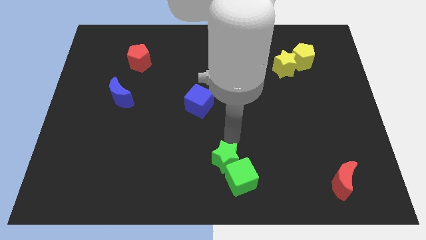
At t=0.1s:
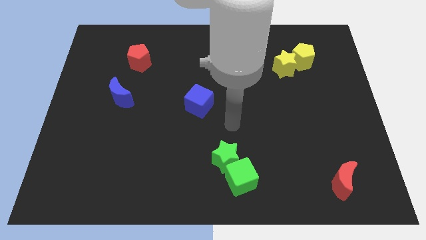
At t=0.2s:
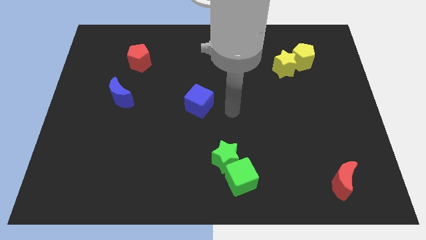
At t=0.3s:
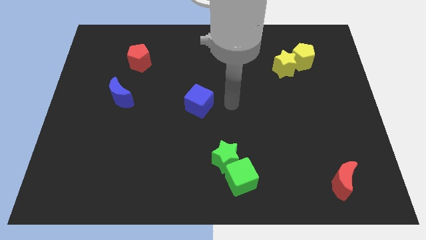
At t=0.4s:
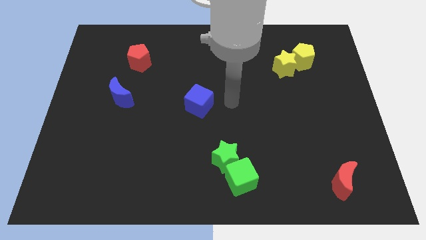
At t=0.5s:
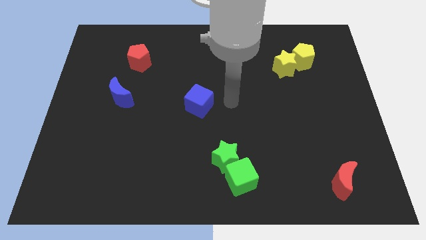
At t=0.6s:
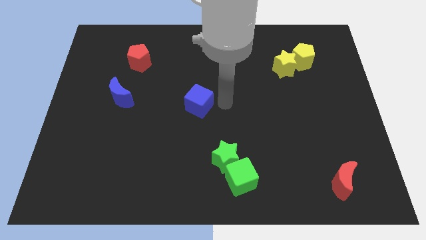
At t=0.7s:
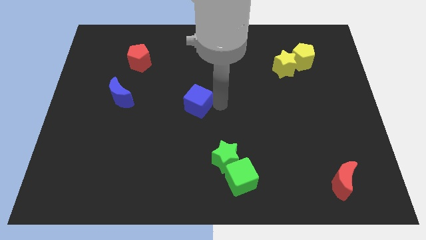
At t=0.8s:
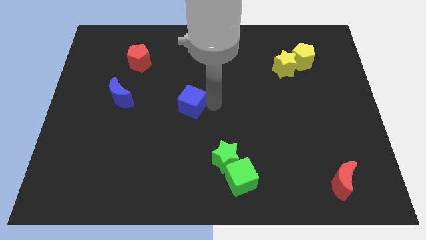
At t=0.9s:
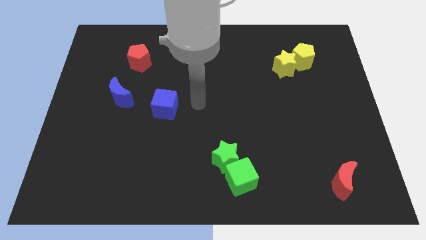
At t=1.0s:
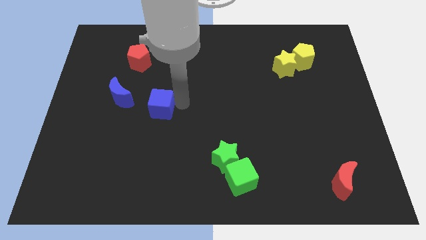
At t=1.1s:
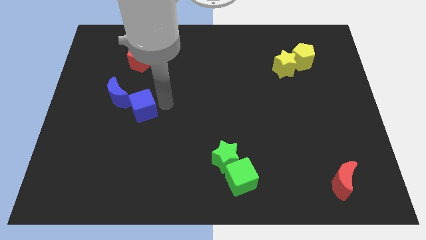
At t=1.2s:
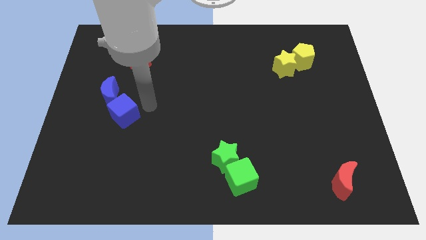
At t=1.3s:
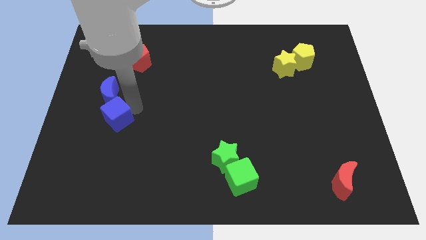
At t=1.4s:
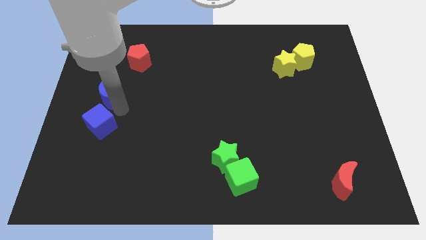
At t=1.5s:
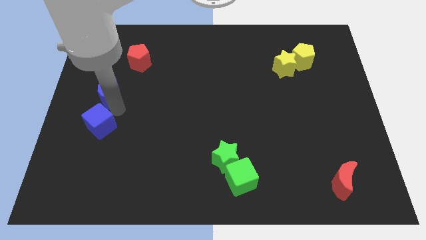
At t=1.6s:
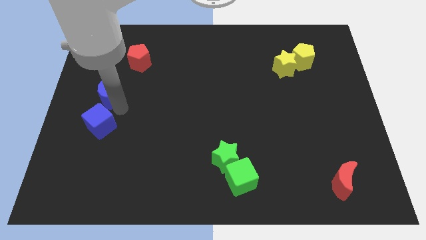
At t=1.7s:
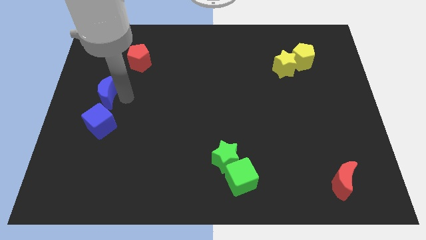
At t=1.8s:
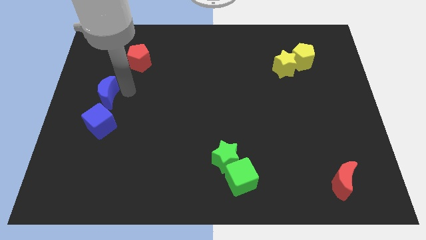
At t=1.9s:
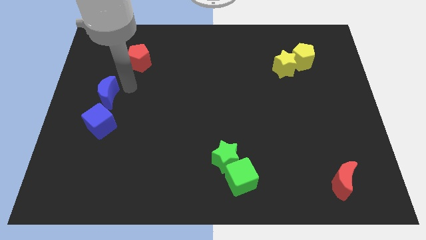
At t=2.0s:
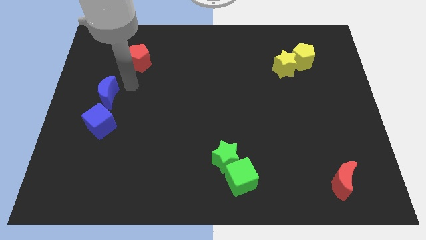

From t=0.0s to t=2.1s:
push blue cube below the blue moon

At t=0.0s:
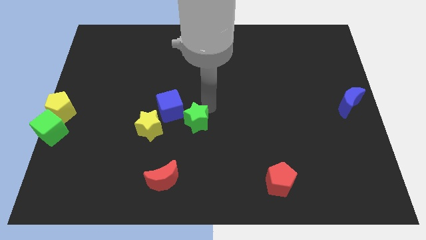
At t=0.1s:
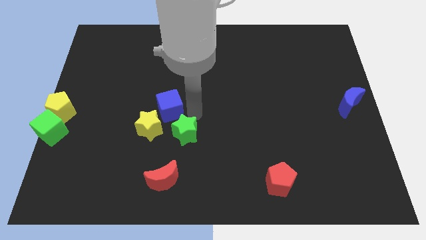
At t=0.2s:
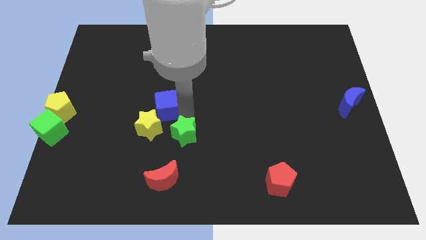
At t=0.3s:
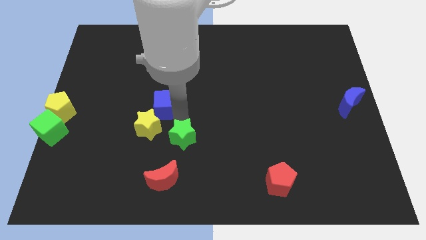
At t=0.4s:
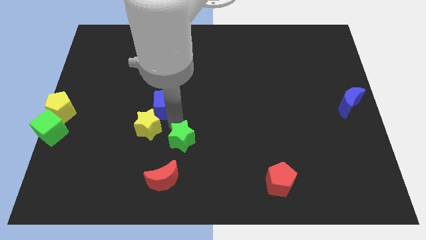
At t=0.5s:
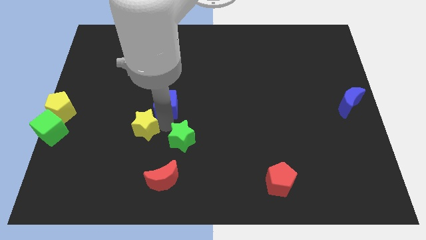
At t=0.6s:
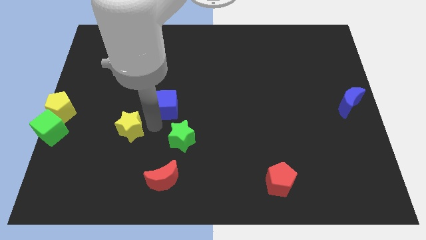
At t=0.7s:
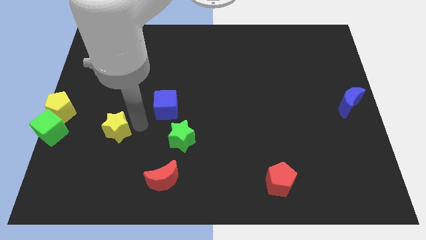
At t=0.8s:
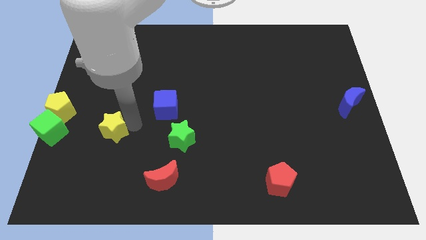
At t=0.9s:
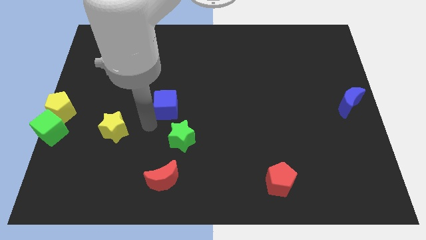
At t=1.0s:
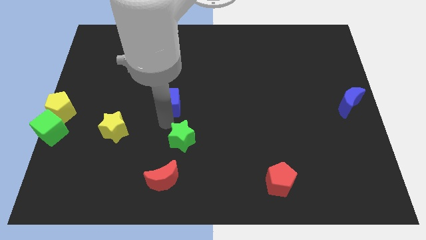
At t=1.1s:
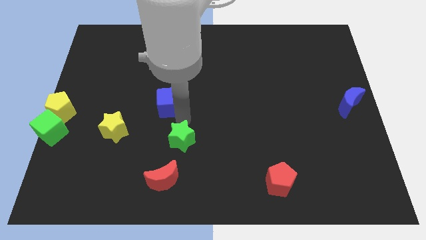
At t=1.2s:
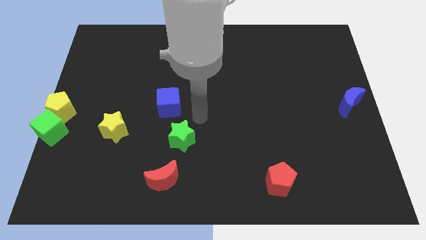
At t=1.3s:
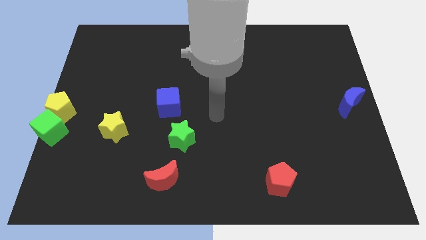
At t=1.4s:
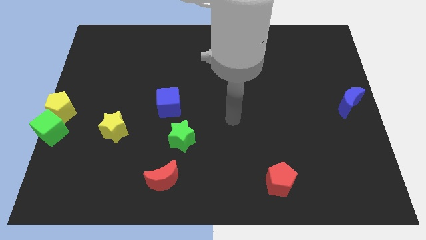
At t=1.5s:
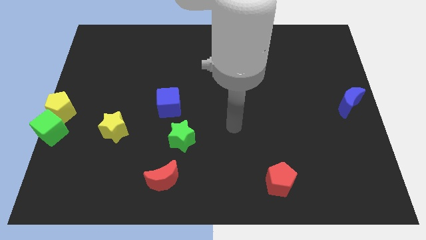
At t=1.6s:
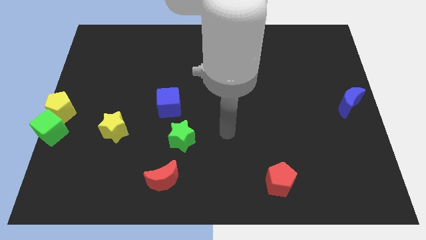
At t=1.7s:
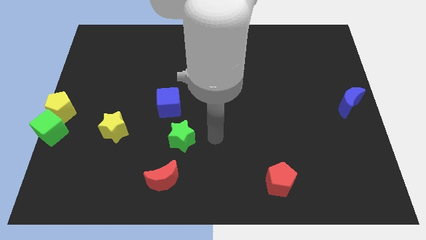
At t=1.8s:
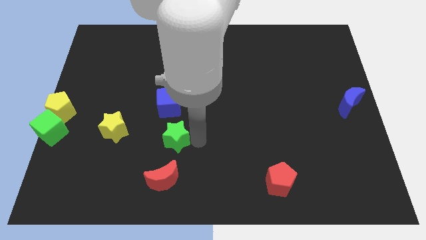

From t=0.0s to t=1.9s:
separate the yellow star from the blue cube

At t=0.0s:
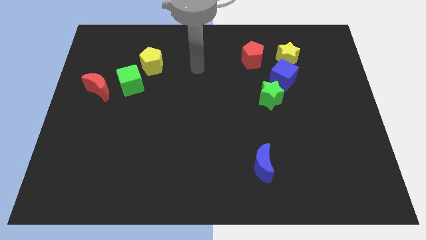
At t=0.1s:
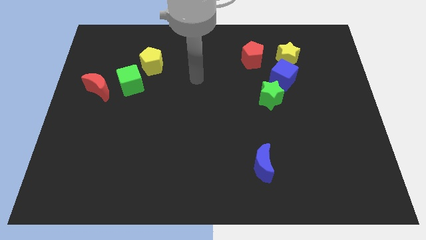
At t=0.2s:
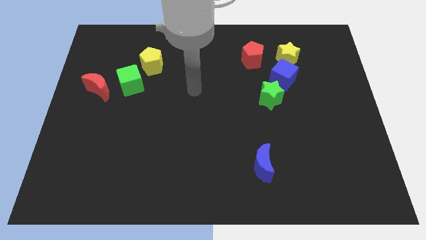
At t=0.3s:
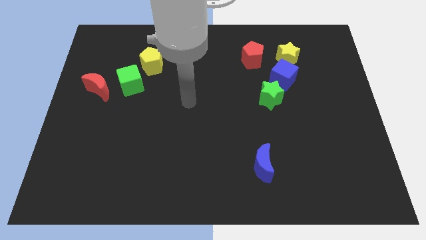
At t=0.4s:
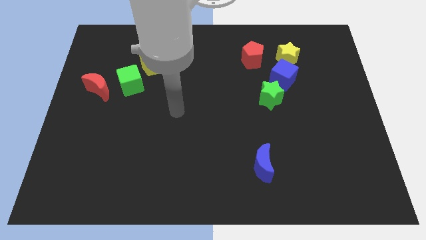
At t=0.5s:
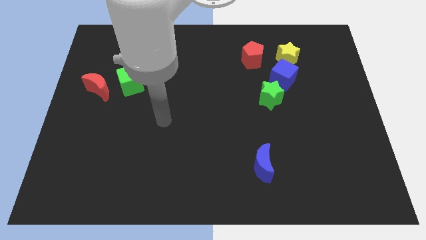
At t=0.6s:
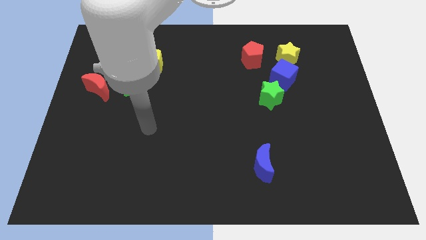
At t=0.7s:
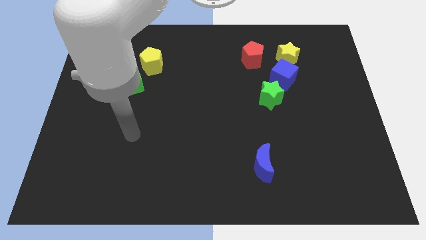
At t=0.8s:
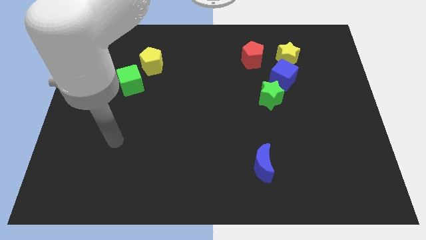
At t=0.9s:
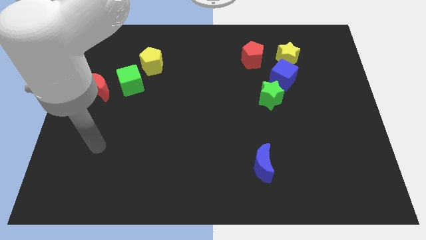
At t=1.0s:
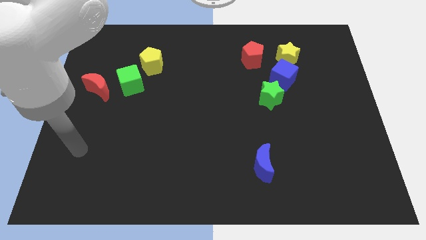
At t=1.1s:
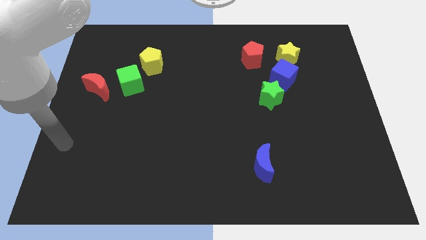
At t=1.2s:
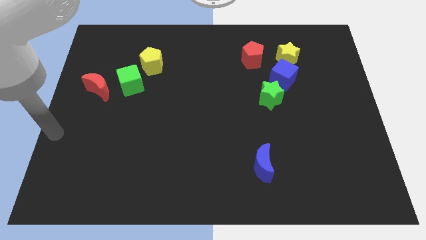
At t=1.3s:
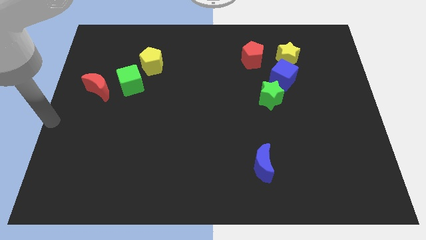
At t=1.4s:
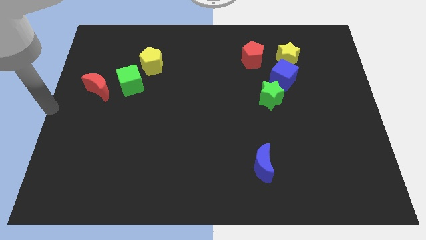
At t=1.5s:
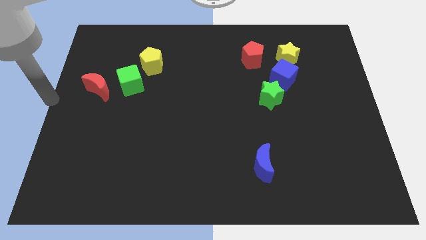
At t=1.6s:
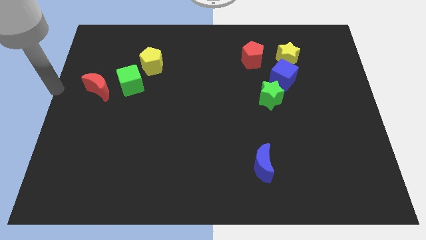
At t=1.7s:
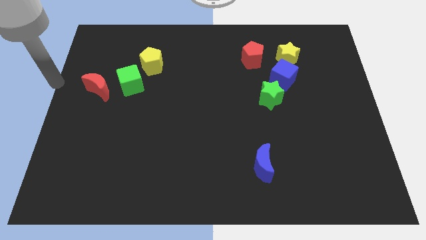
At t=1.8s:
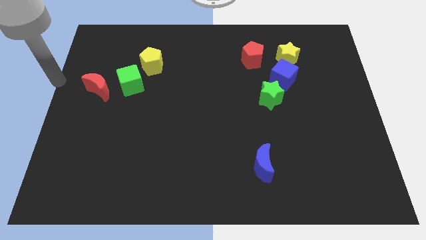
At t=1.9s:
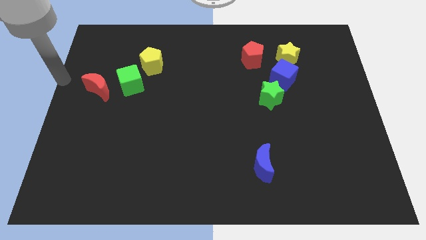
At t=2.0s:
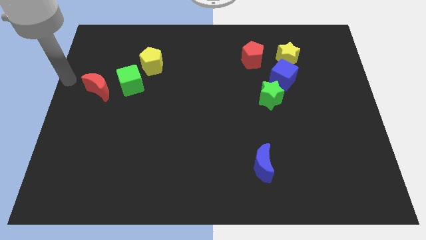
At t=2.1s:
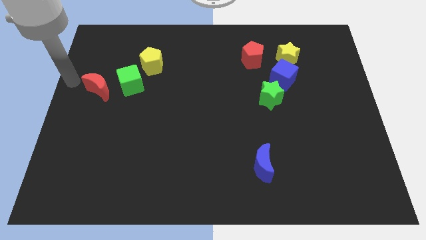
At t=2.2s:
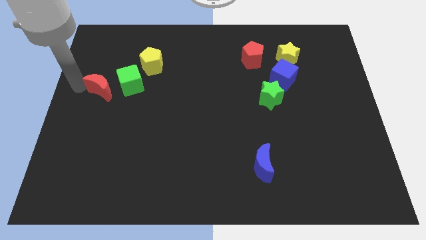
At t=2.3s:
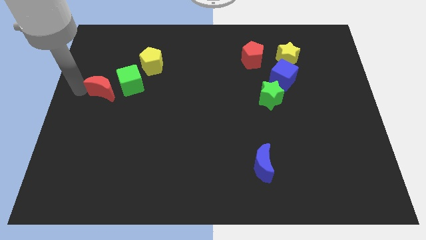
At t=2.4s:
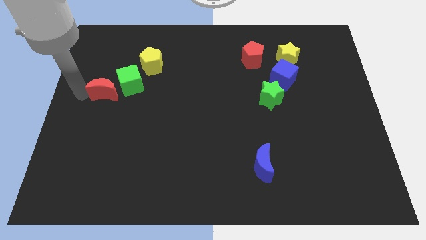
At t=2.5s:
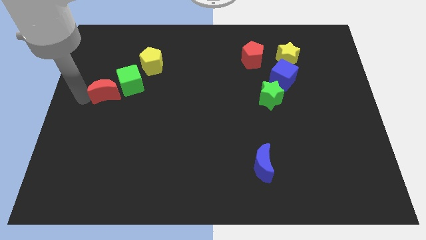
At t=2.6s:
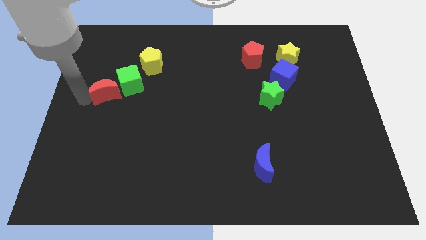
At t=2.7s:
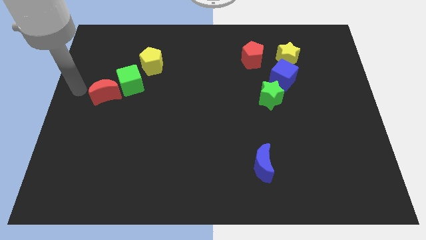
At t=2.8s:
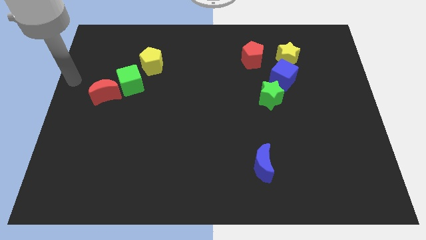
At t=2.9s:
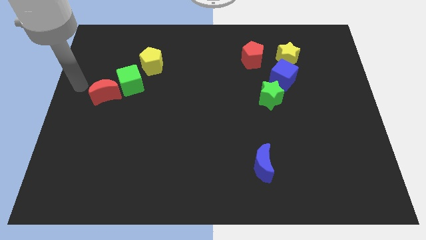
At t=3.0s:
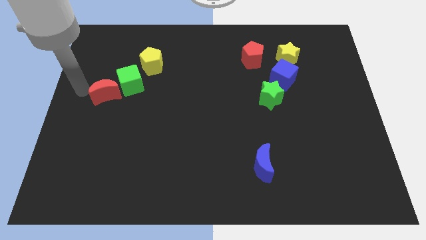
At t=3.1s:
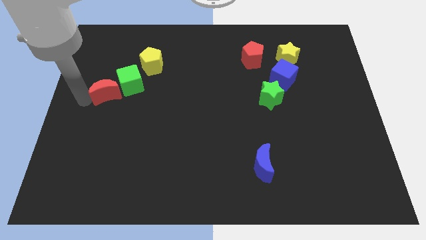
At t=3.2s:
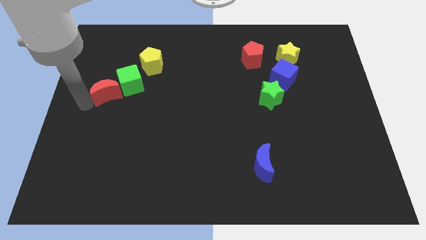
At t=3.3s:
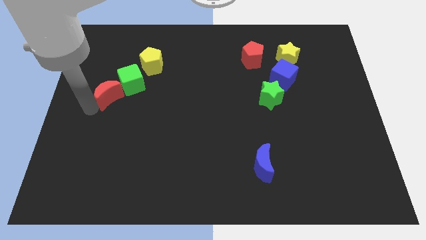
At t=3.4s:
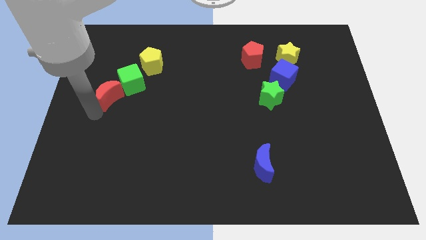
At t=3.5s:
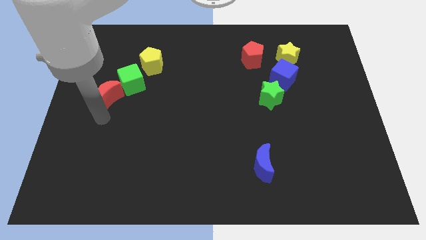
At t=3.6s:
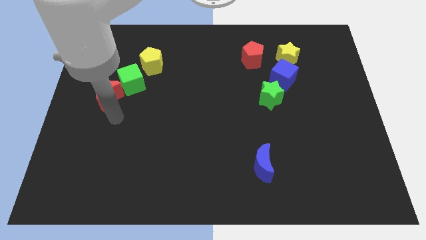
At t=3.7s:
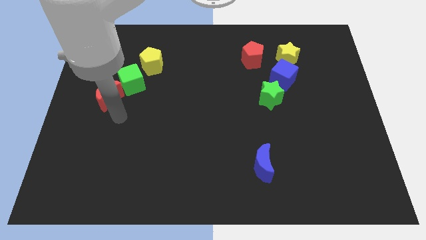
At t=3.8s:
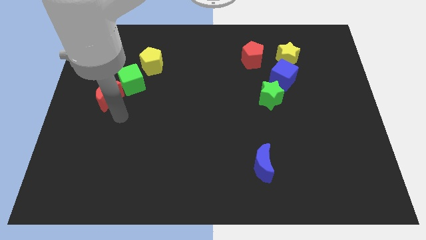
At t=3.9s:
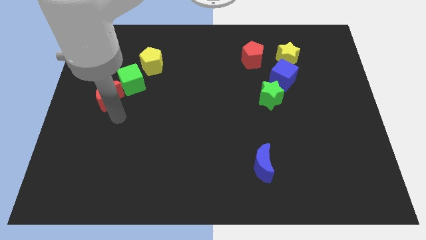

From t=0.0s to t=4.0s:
slightly touch the red crescent

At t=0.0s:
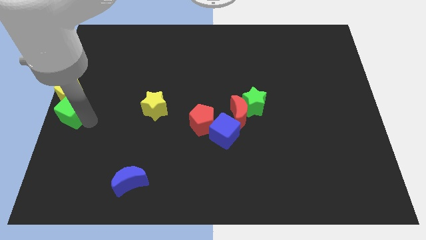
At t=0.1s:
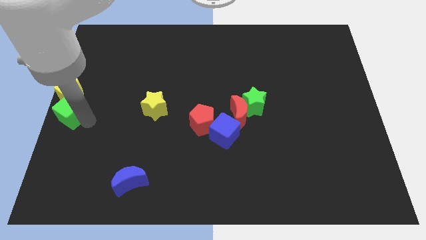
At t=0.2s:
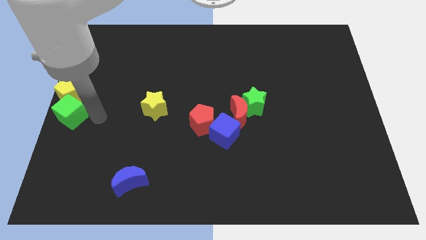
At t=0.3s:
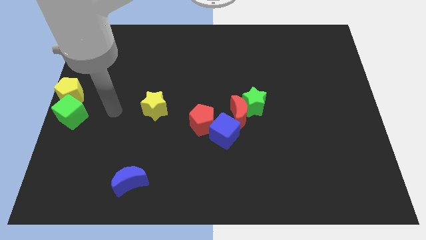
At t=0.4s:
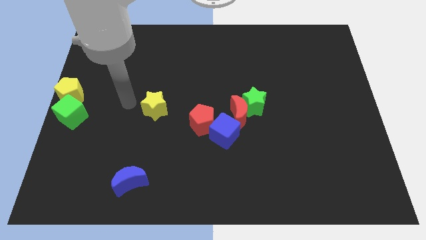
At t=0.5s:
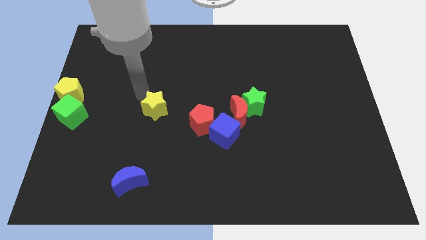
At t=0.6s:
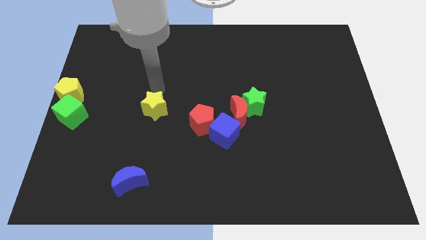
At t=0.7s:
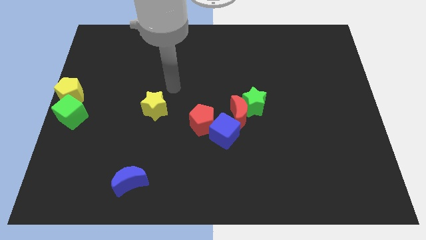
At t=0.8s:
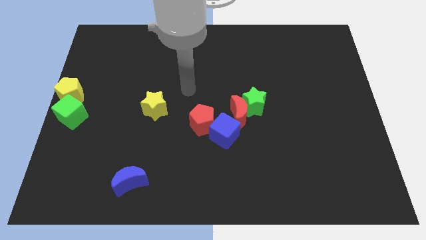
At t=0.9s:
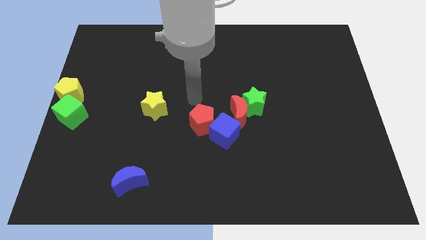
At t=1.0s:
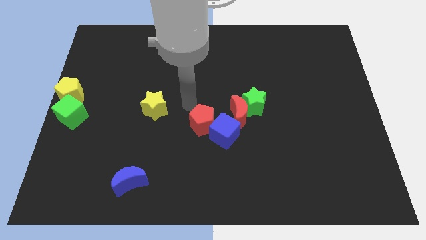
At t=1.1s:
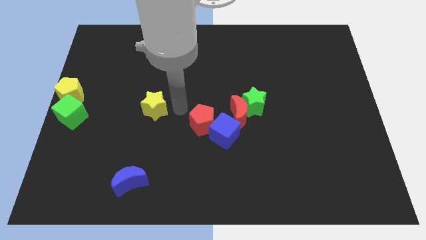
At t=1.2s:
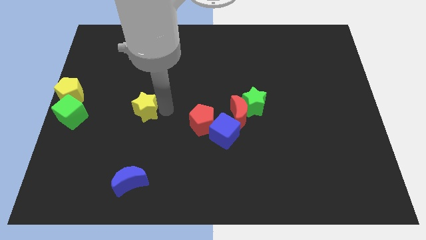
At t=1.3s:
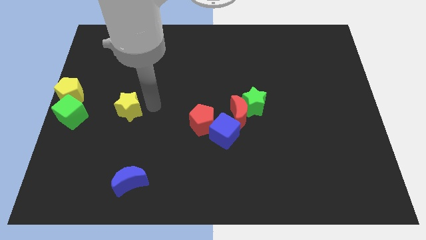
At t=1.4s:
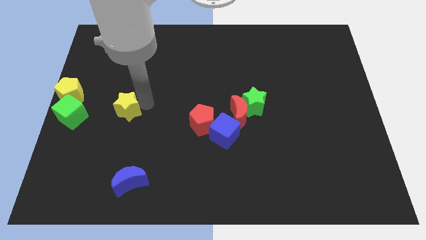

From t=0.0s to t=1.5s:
push the yellow star towards the green cube
